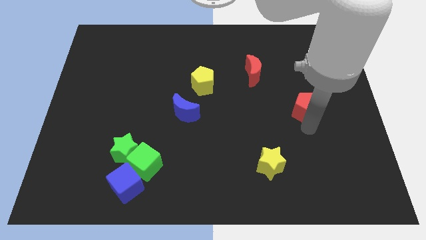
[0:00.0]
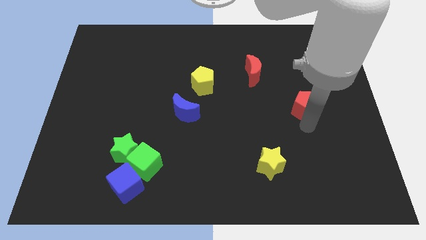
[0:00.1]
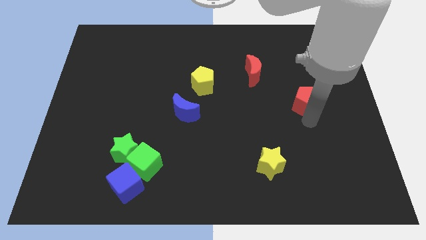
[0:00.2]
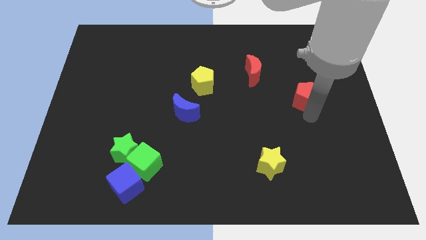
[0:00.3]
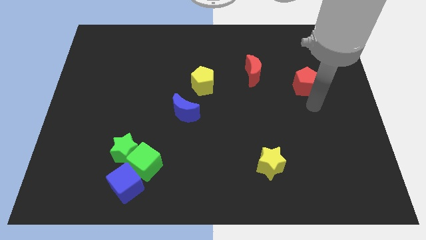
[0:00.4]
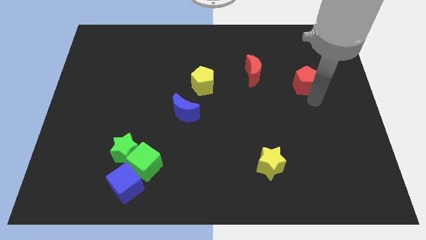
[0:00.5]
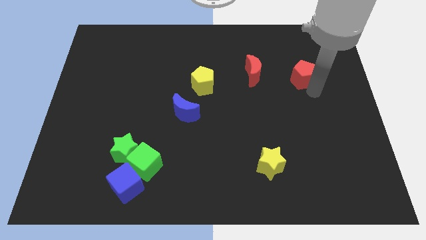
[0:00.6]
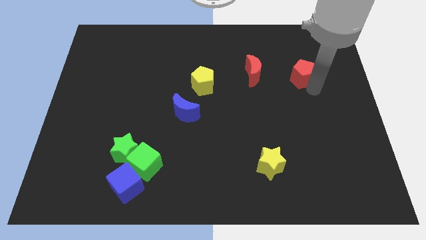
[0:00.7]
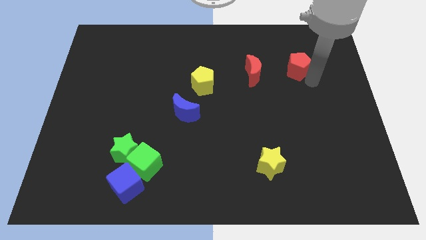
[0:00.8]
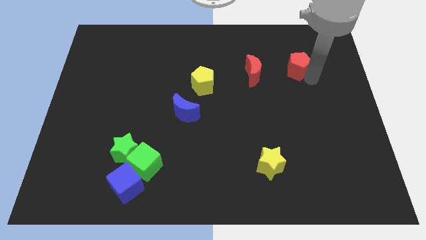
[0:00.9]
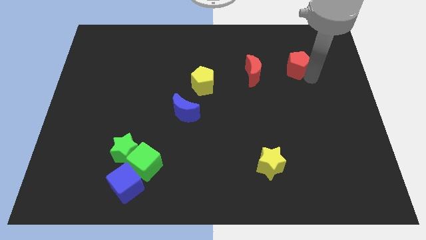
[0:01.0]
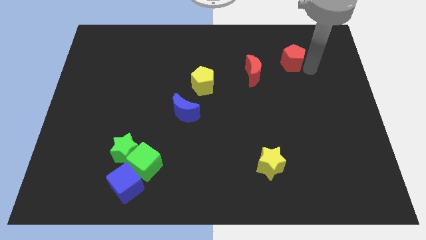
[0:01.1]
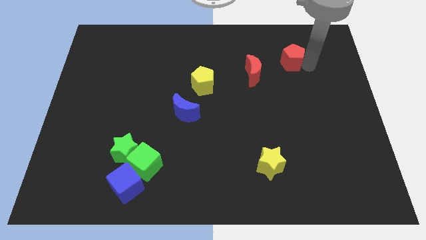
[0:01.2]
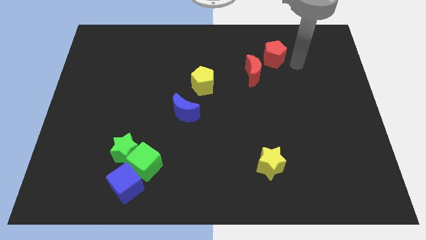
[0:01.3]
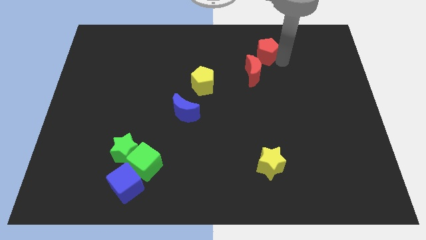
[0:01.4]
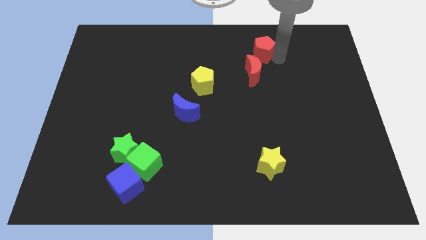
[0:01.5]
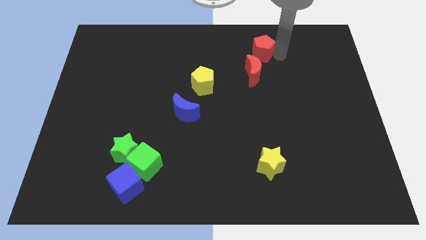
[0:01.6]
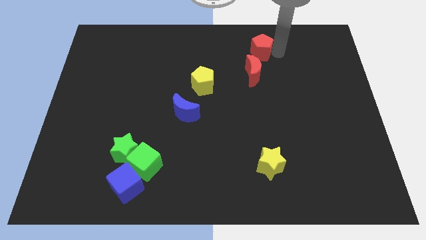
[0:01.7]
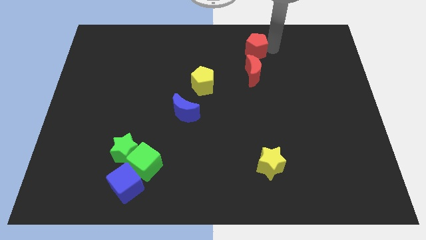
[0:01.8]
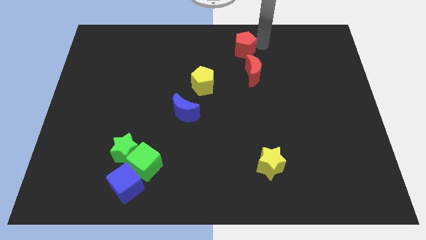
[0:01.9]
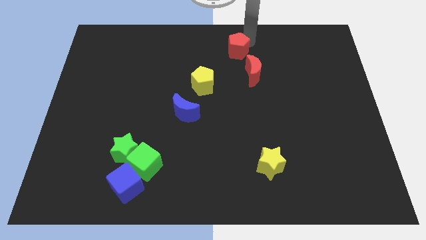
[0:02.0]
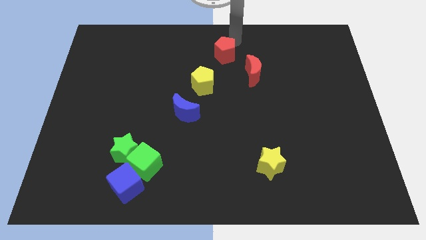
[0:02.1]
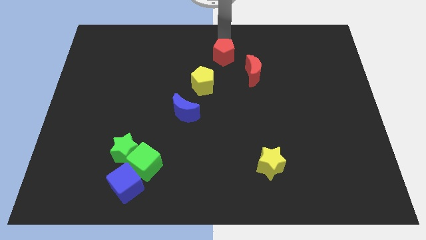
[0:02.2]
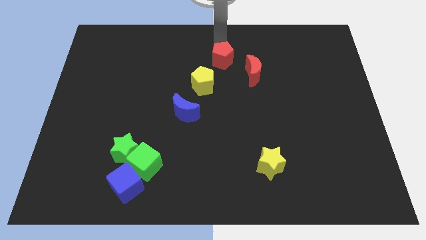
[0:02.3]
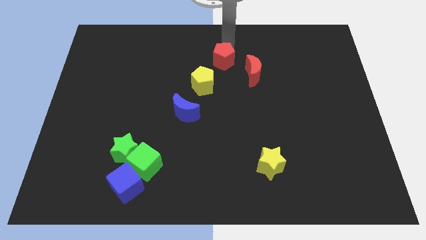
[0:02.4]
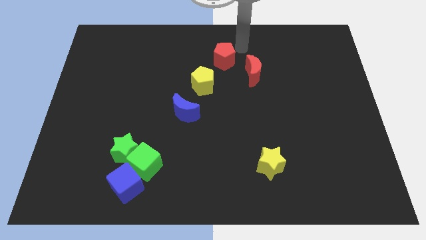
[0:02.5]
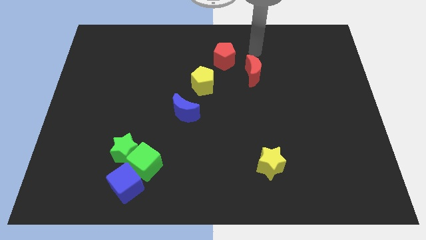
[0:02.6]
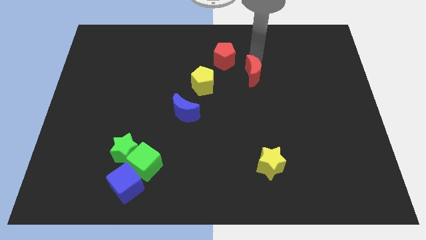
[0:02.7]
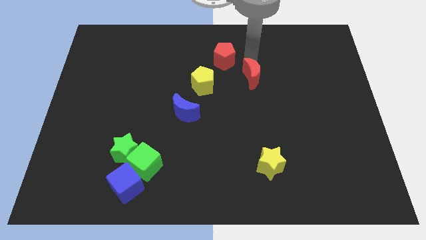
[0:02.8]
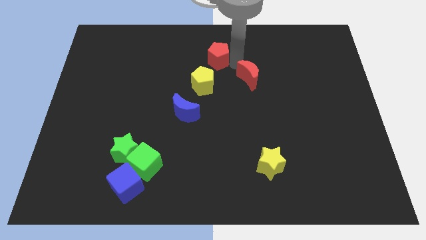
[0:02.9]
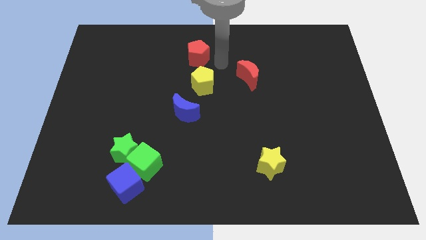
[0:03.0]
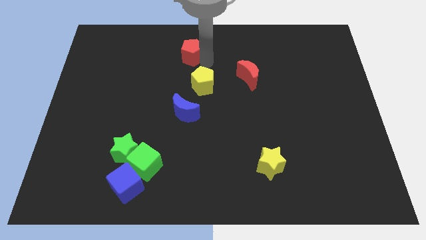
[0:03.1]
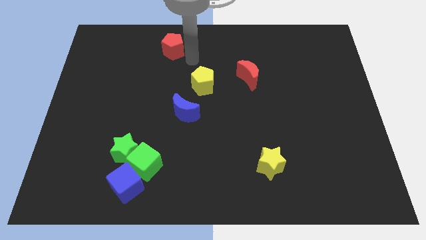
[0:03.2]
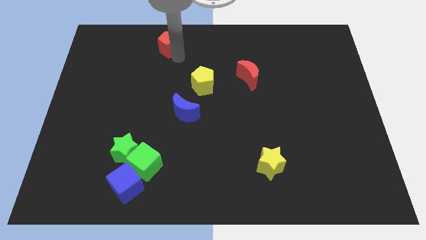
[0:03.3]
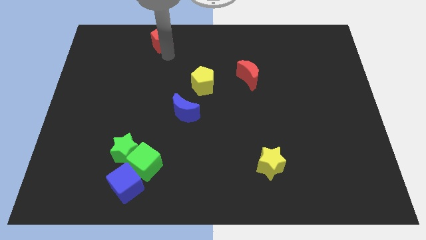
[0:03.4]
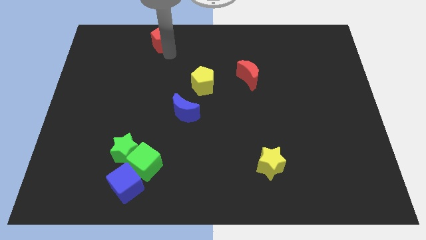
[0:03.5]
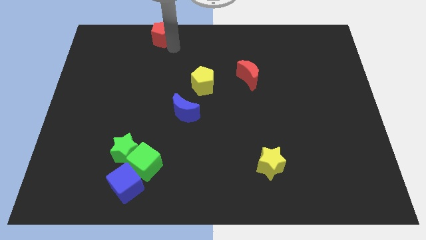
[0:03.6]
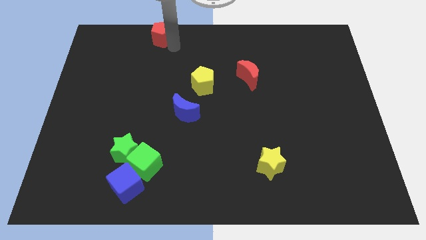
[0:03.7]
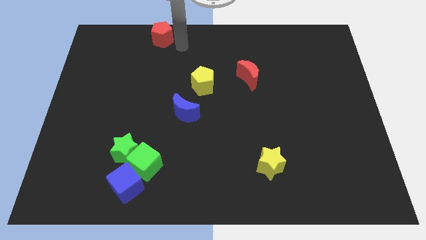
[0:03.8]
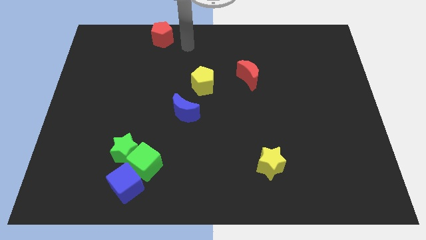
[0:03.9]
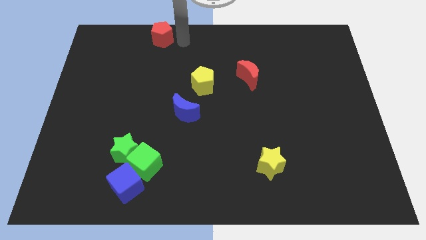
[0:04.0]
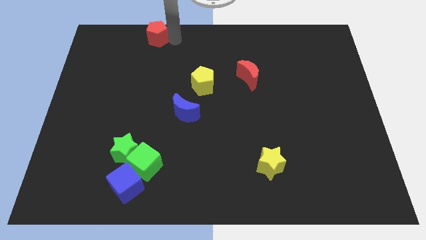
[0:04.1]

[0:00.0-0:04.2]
push the red pentagon to the top left of the board

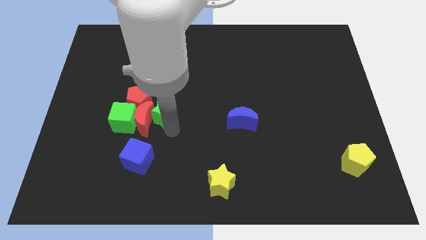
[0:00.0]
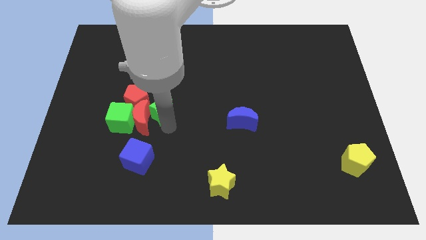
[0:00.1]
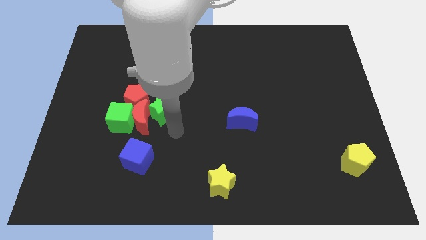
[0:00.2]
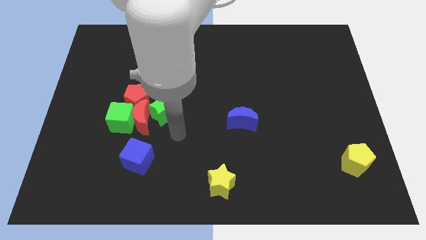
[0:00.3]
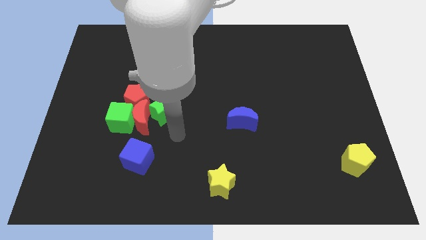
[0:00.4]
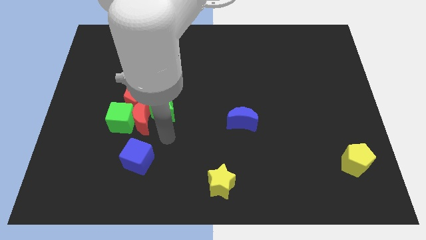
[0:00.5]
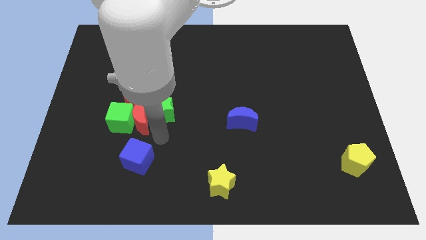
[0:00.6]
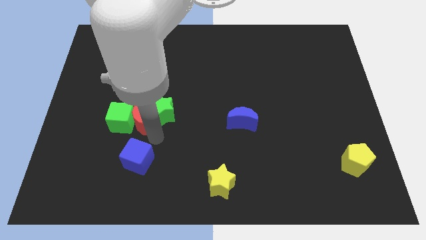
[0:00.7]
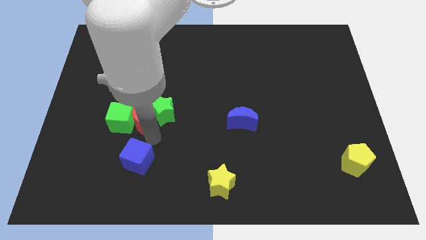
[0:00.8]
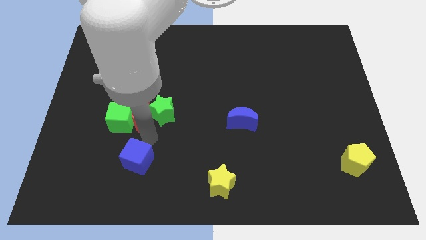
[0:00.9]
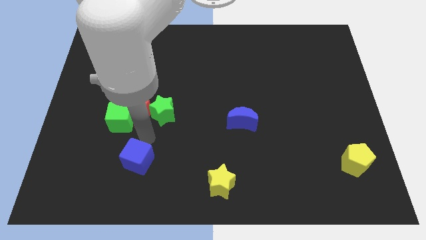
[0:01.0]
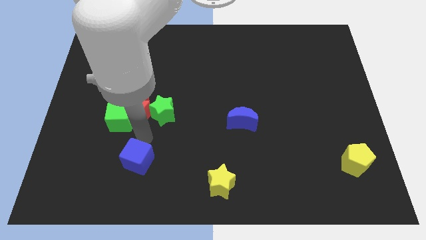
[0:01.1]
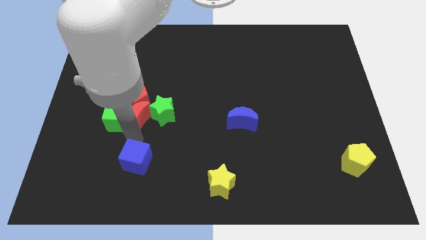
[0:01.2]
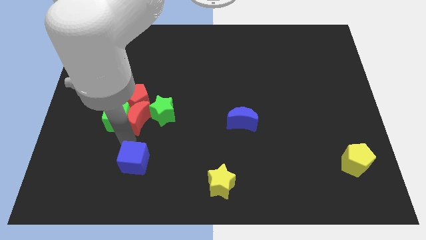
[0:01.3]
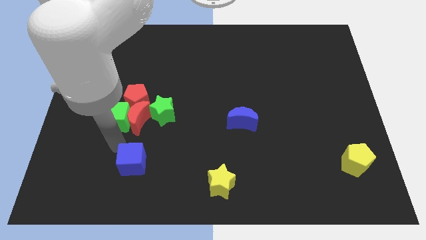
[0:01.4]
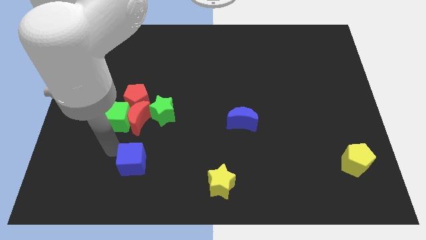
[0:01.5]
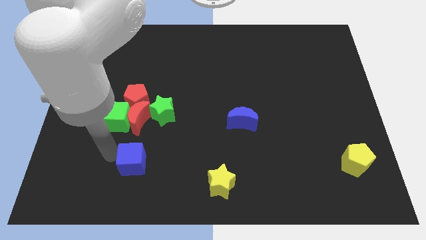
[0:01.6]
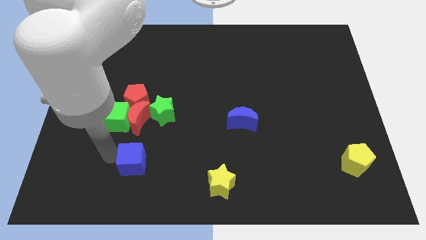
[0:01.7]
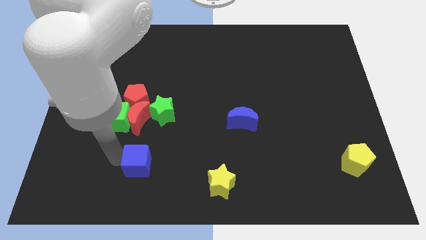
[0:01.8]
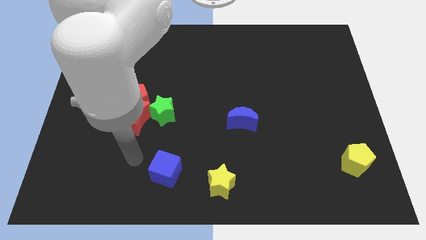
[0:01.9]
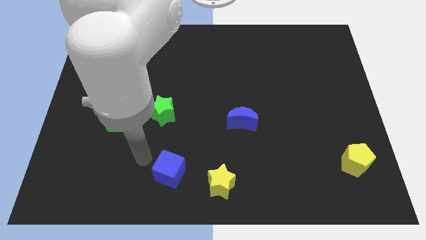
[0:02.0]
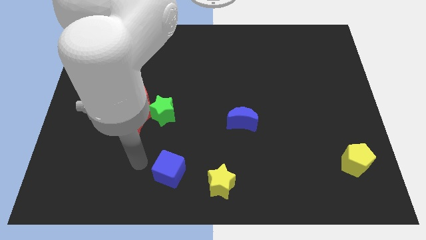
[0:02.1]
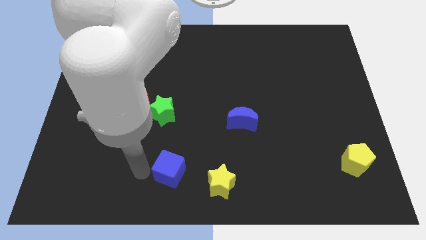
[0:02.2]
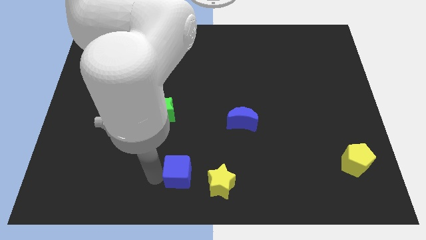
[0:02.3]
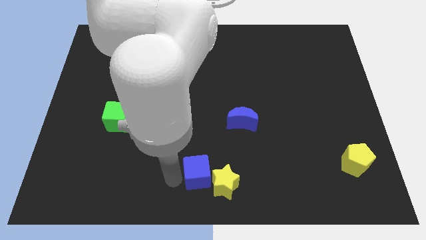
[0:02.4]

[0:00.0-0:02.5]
move the blue cube left to the yellow star

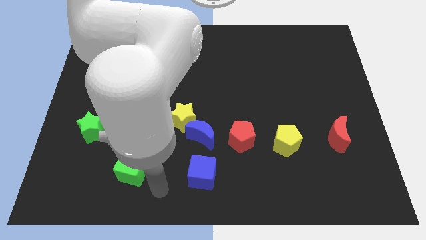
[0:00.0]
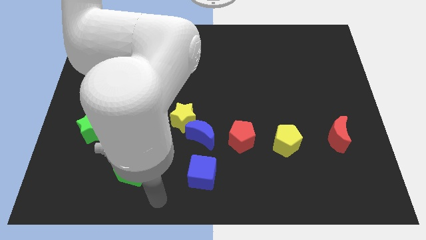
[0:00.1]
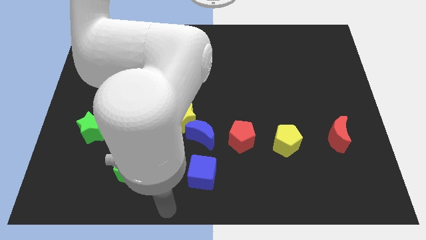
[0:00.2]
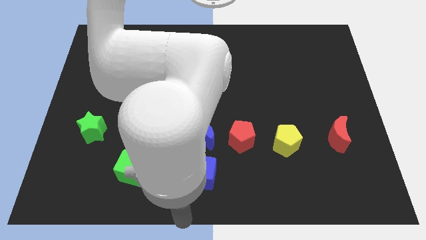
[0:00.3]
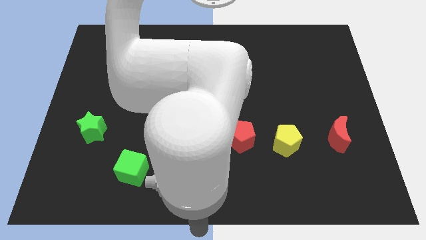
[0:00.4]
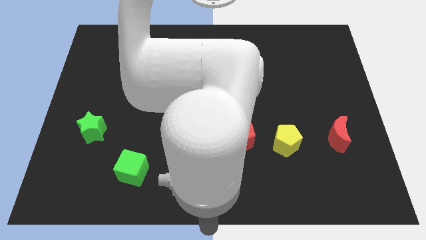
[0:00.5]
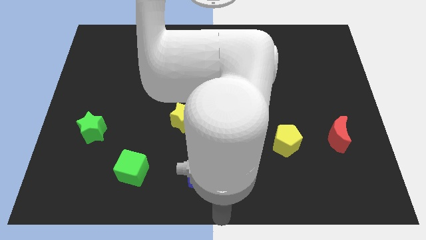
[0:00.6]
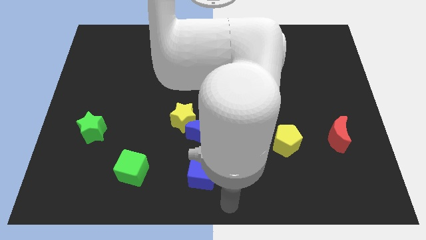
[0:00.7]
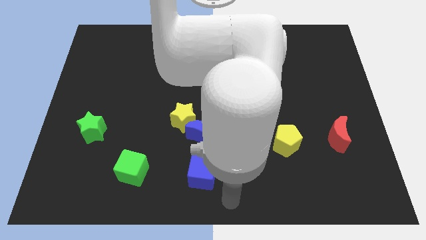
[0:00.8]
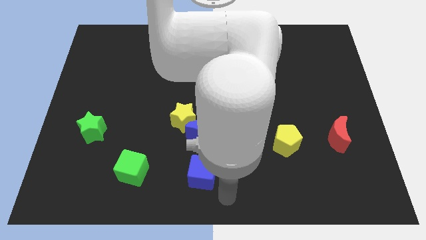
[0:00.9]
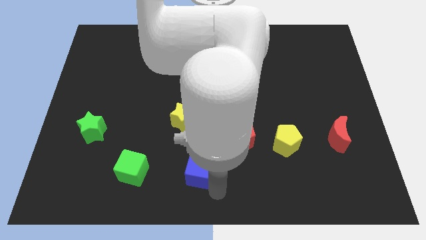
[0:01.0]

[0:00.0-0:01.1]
place arm at the bottom of blue cube

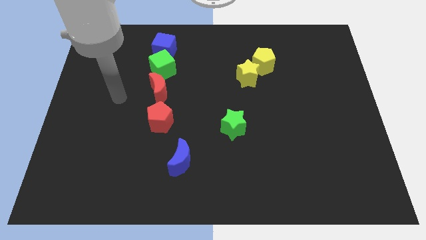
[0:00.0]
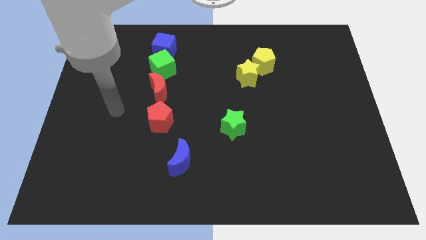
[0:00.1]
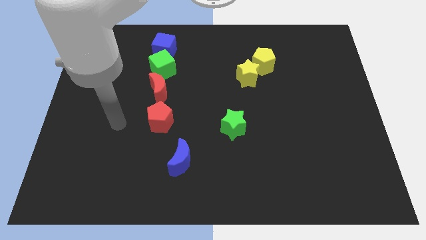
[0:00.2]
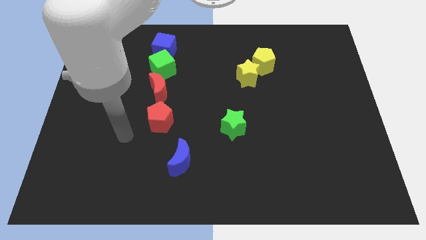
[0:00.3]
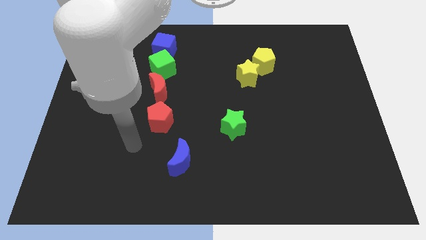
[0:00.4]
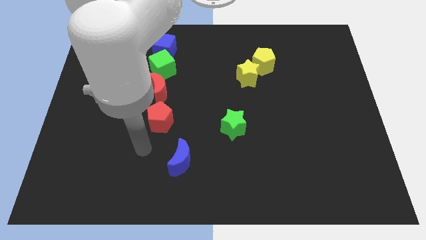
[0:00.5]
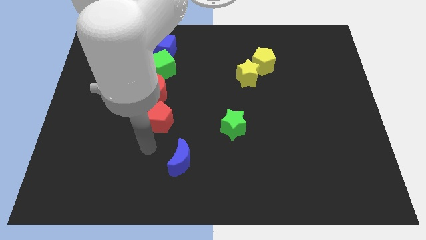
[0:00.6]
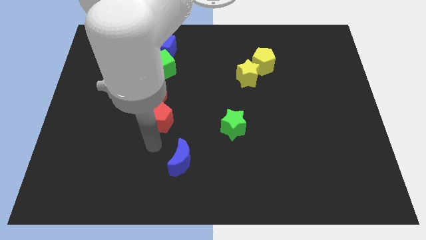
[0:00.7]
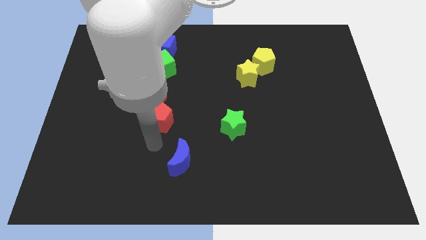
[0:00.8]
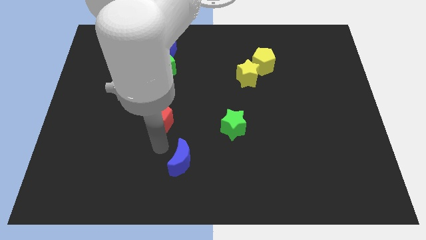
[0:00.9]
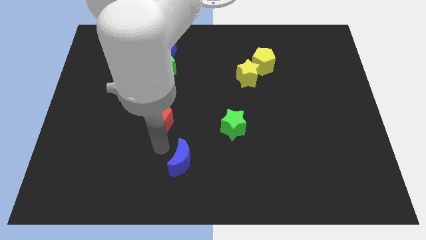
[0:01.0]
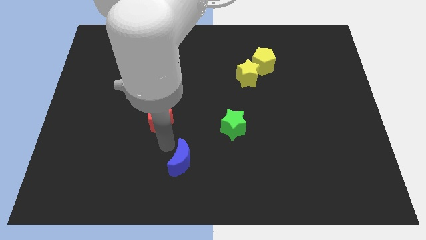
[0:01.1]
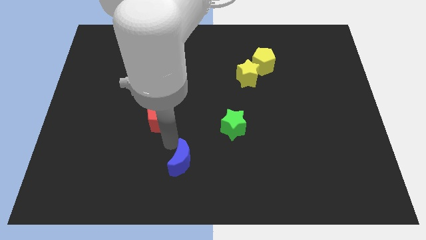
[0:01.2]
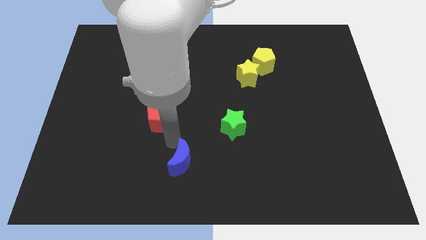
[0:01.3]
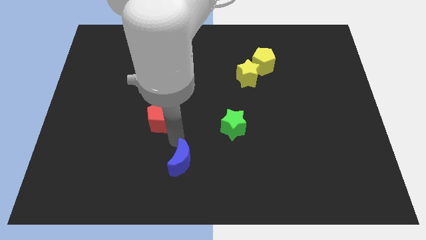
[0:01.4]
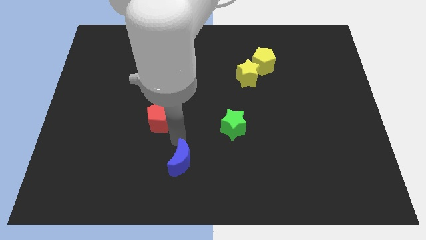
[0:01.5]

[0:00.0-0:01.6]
point your arm at the top of the blue crescent
